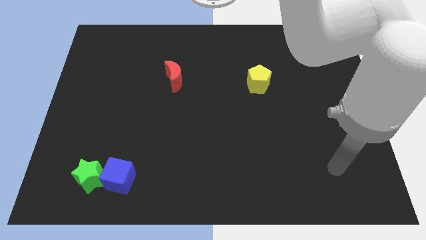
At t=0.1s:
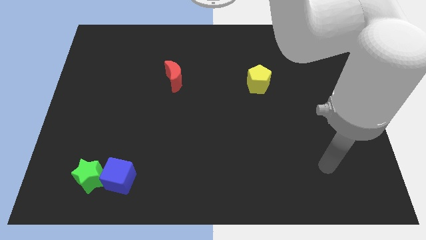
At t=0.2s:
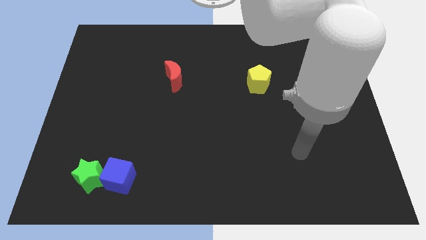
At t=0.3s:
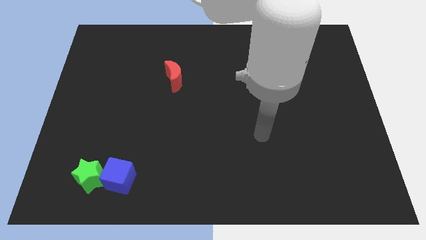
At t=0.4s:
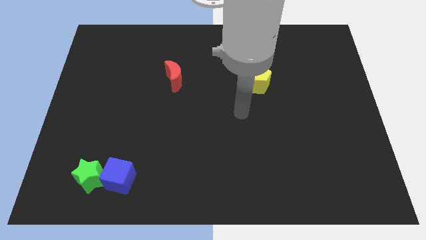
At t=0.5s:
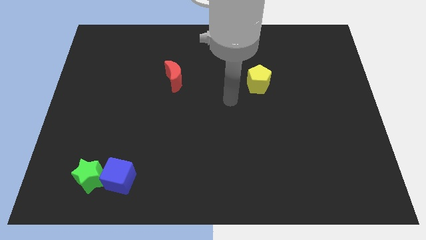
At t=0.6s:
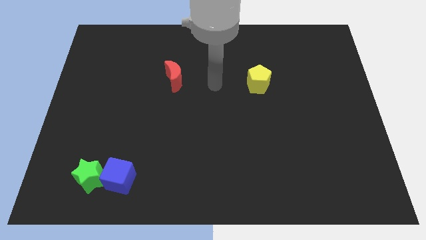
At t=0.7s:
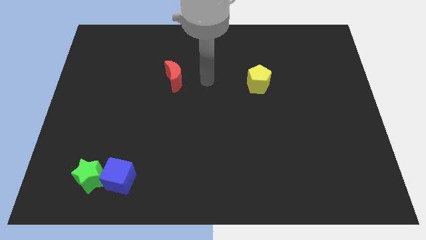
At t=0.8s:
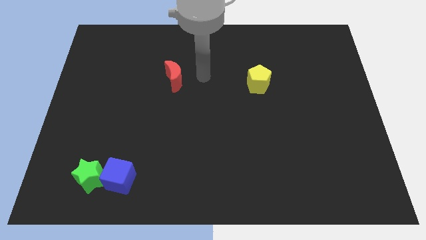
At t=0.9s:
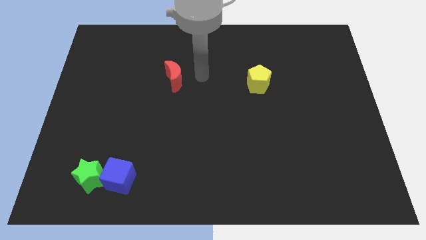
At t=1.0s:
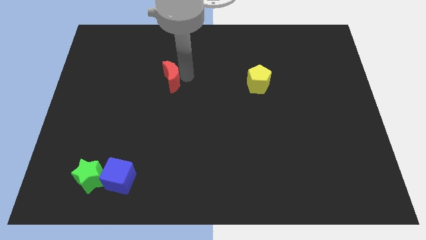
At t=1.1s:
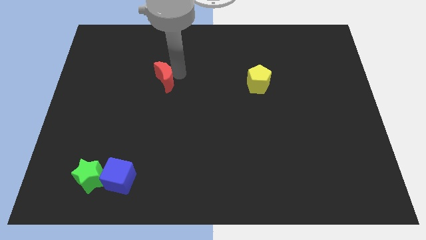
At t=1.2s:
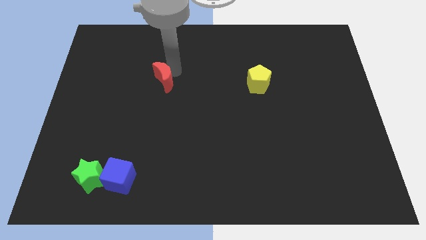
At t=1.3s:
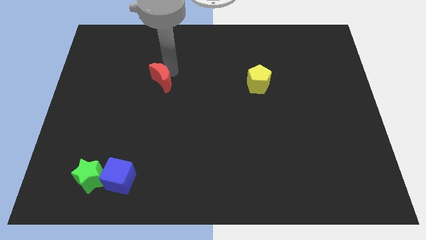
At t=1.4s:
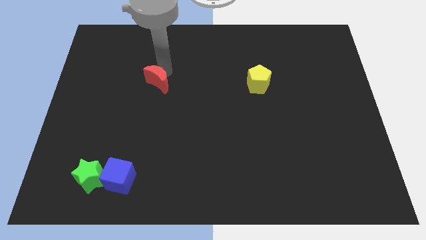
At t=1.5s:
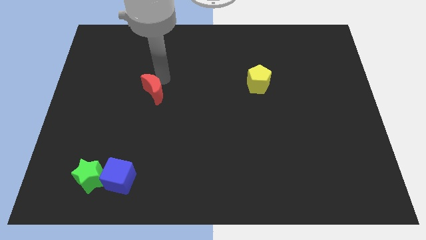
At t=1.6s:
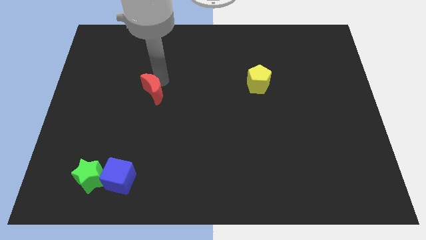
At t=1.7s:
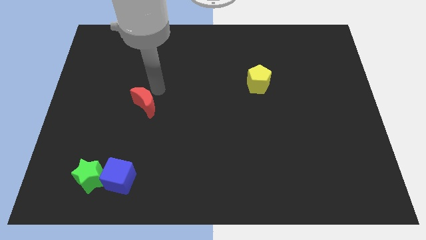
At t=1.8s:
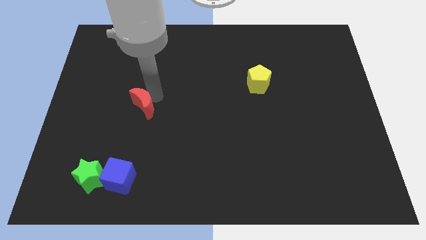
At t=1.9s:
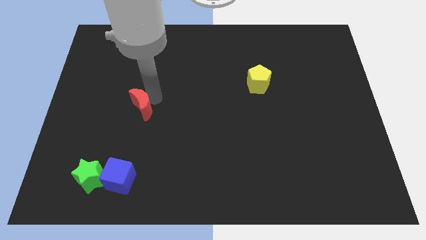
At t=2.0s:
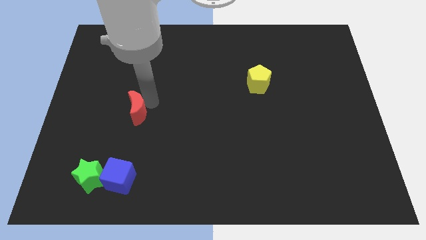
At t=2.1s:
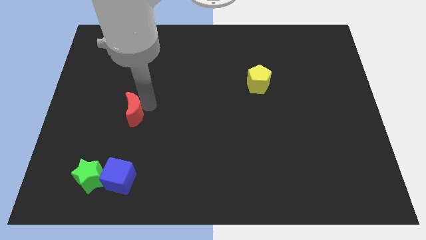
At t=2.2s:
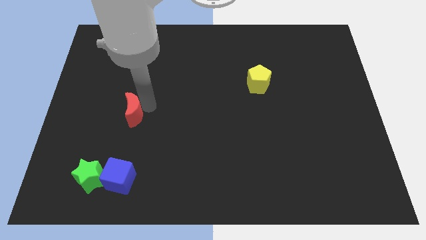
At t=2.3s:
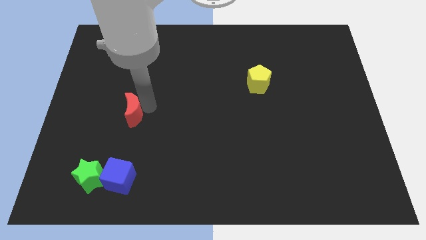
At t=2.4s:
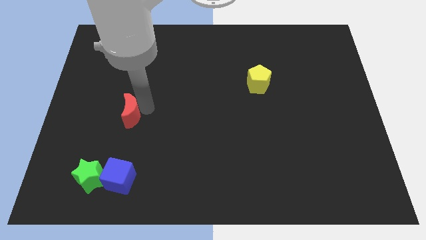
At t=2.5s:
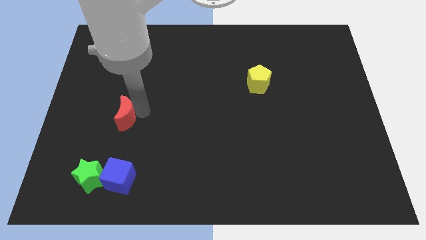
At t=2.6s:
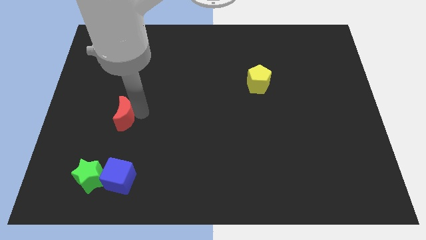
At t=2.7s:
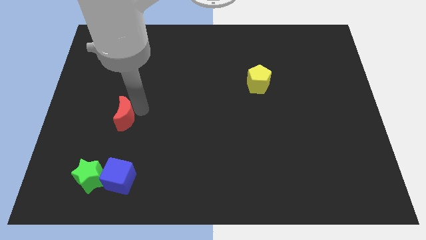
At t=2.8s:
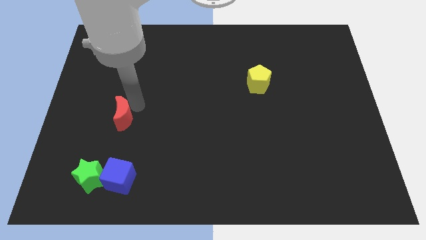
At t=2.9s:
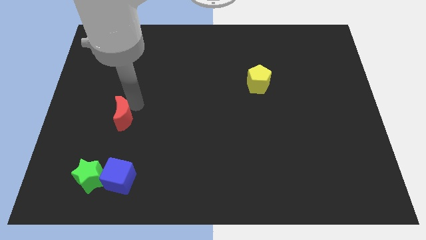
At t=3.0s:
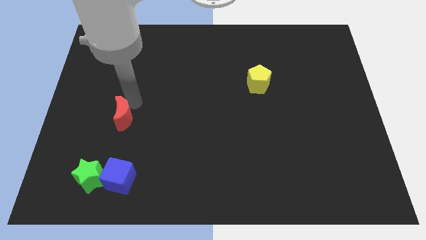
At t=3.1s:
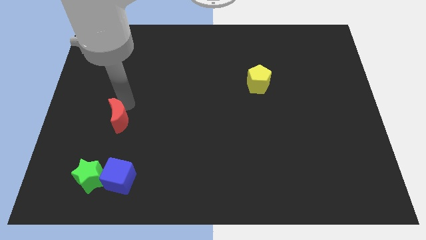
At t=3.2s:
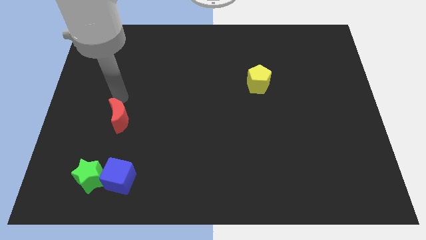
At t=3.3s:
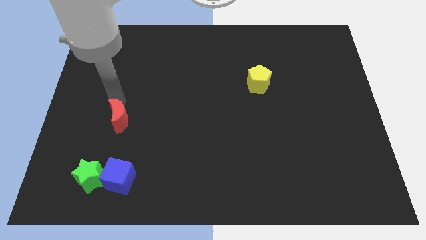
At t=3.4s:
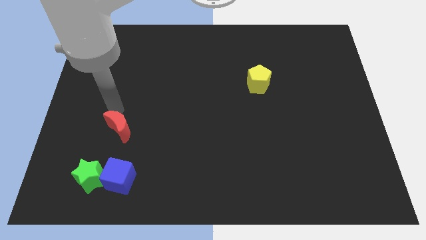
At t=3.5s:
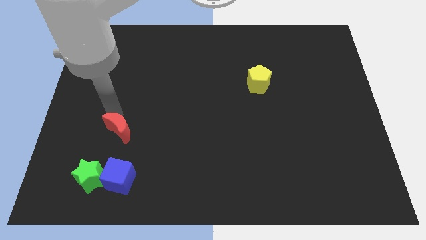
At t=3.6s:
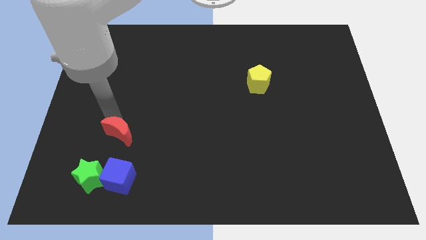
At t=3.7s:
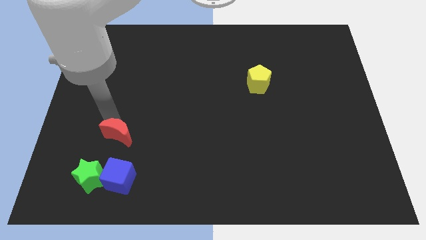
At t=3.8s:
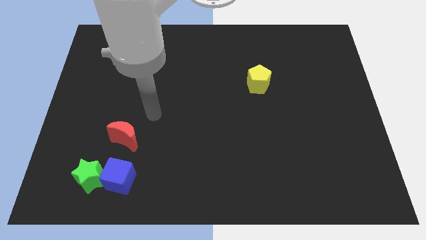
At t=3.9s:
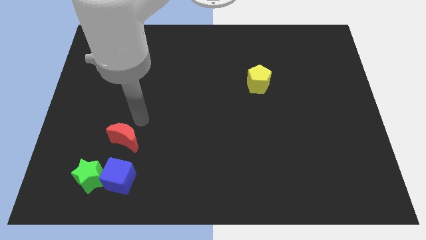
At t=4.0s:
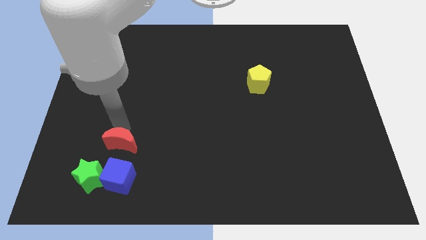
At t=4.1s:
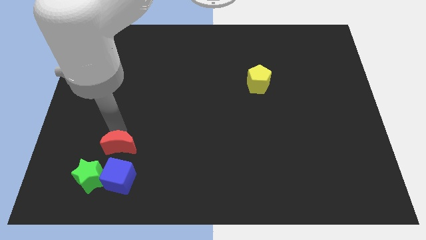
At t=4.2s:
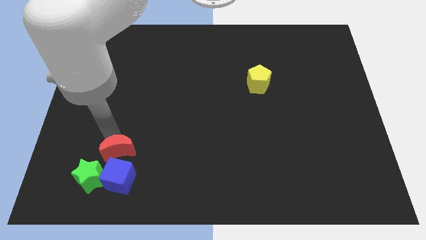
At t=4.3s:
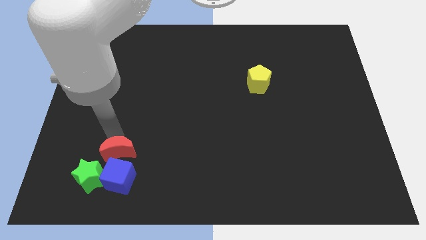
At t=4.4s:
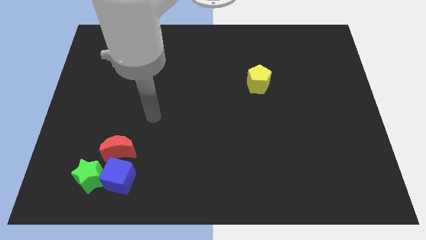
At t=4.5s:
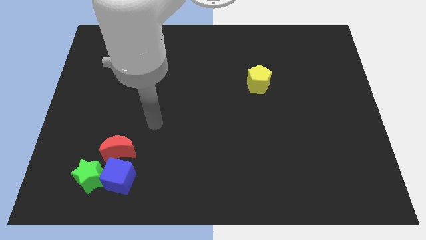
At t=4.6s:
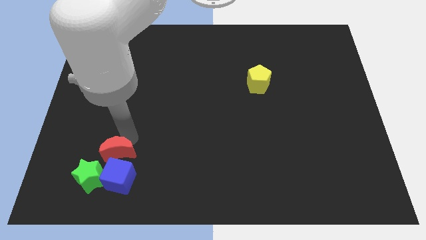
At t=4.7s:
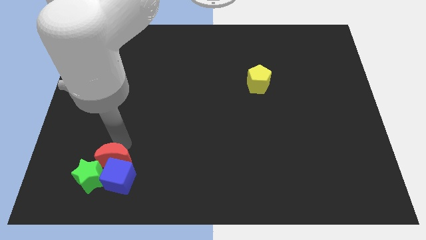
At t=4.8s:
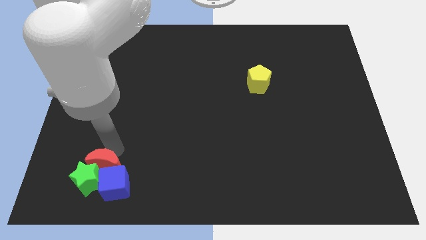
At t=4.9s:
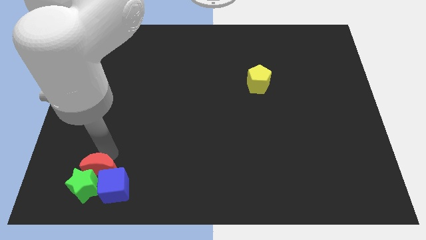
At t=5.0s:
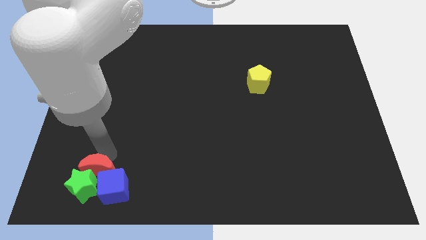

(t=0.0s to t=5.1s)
slide the moon close to the green block

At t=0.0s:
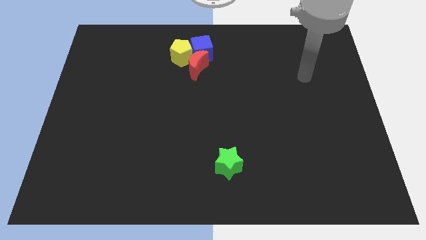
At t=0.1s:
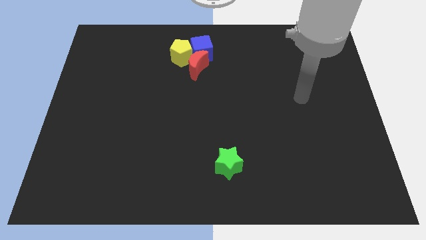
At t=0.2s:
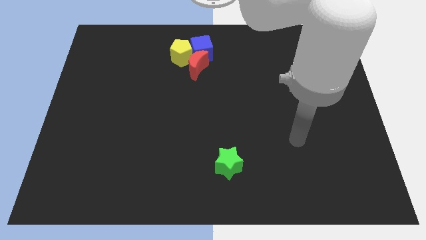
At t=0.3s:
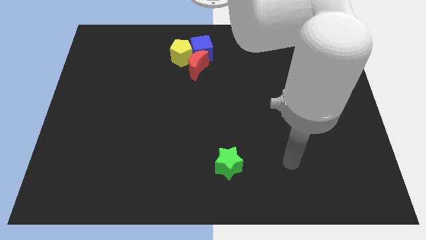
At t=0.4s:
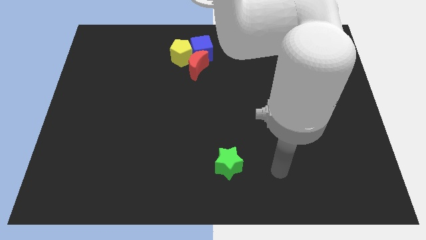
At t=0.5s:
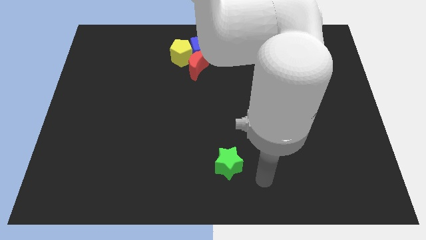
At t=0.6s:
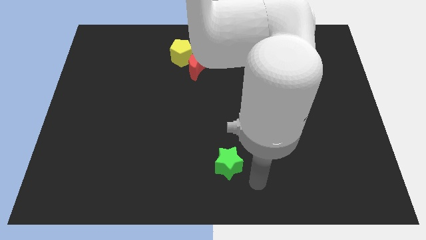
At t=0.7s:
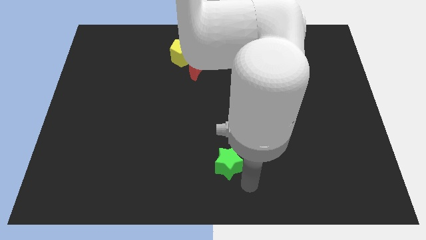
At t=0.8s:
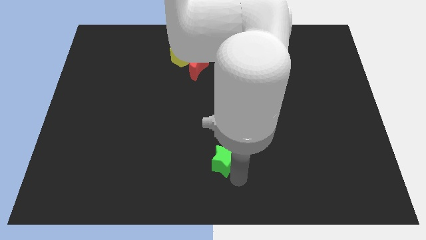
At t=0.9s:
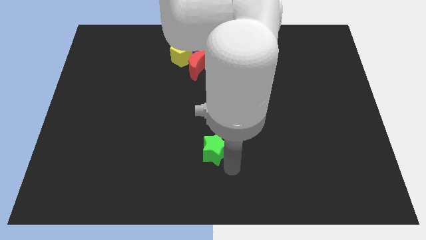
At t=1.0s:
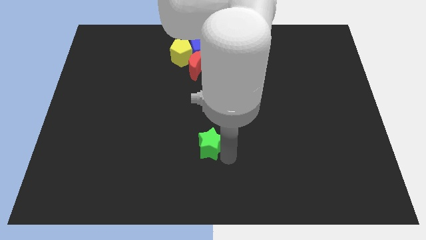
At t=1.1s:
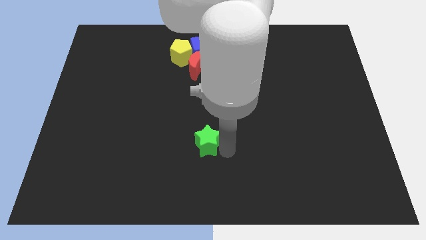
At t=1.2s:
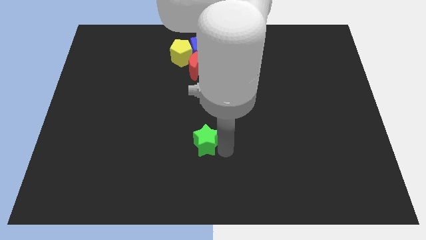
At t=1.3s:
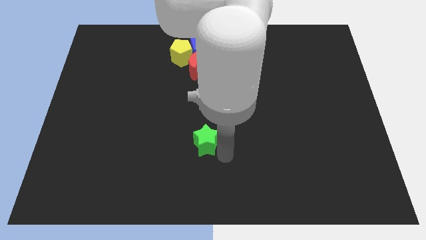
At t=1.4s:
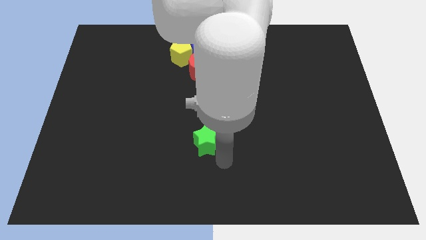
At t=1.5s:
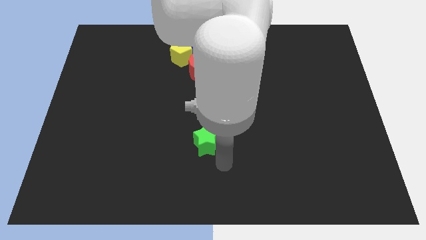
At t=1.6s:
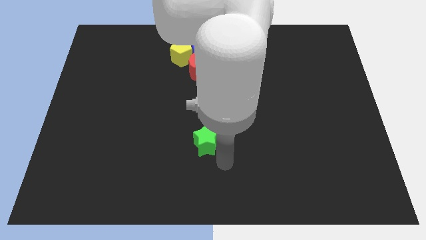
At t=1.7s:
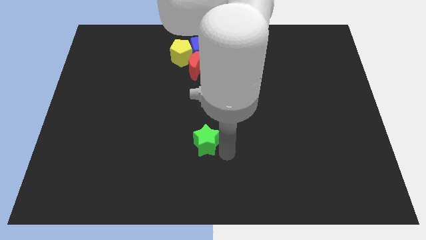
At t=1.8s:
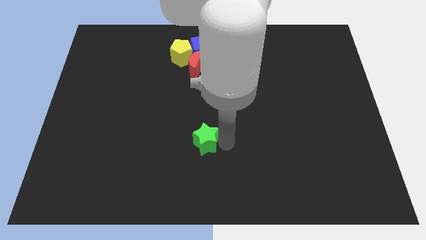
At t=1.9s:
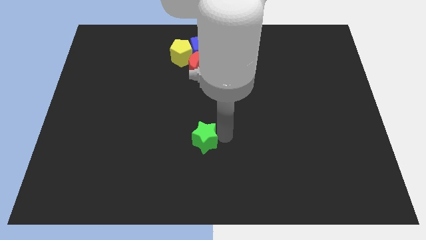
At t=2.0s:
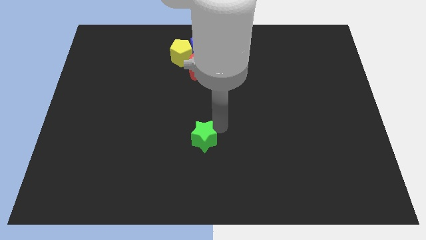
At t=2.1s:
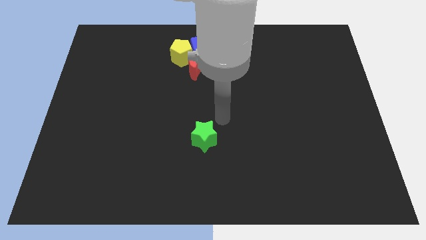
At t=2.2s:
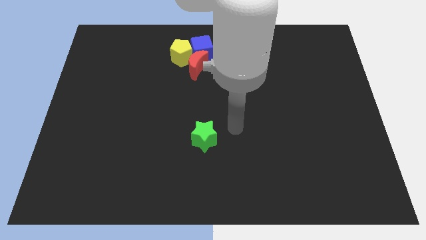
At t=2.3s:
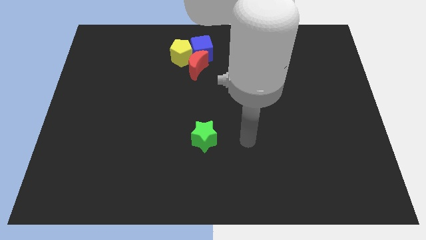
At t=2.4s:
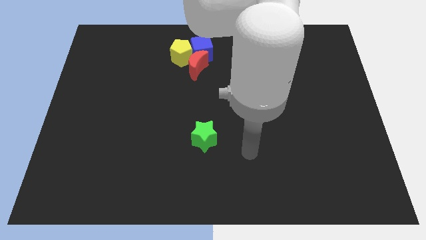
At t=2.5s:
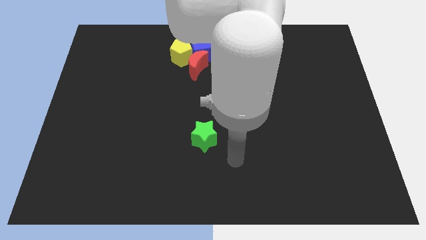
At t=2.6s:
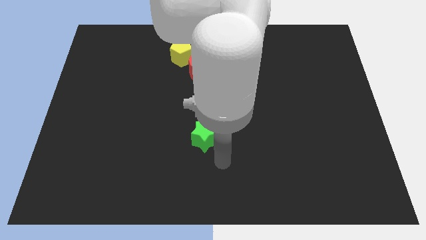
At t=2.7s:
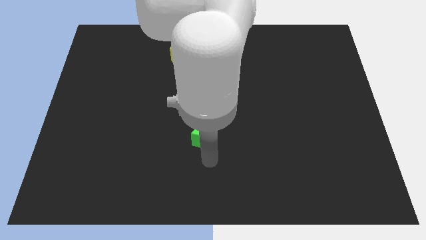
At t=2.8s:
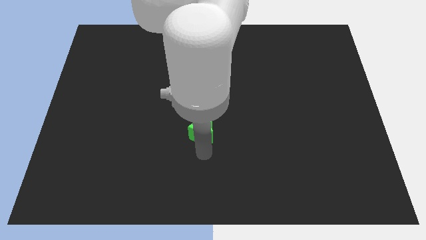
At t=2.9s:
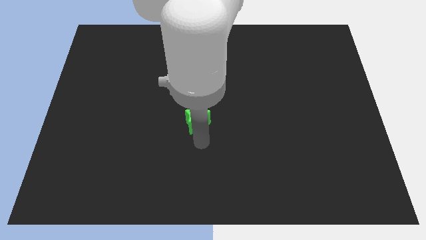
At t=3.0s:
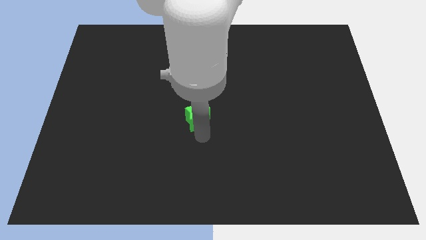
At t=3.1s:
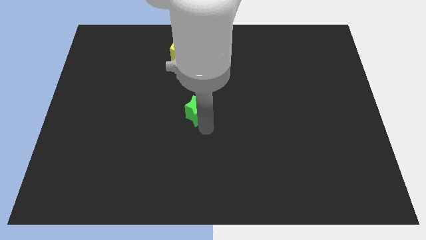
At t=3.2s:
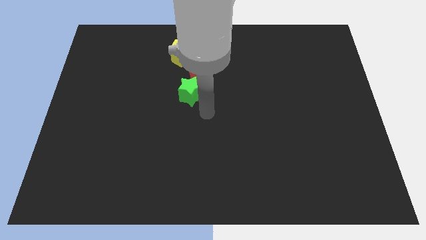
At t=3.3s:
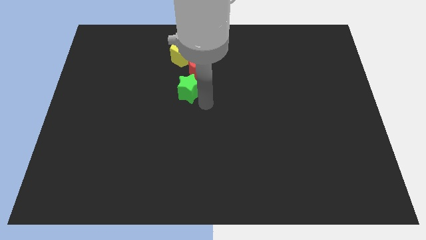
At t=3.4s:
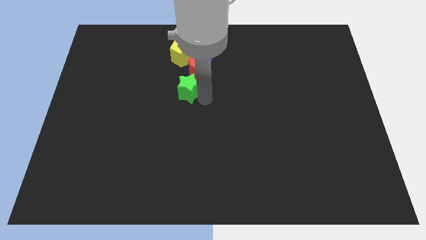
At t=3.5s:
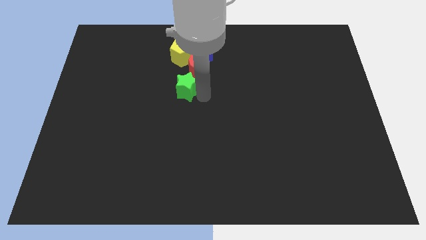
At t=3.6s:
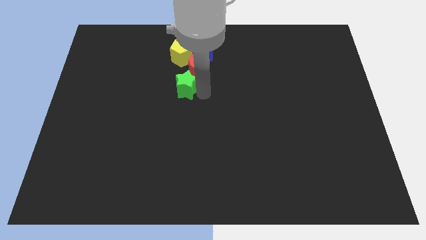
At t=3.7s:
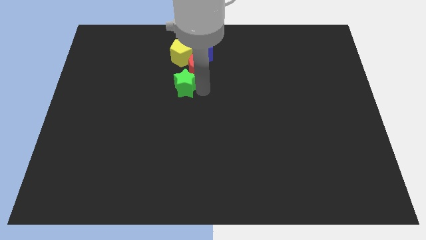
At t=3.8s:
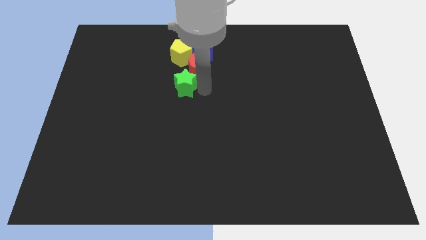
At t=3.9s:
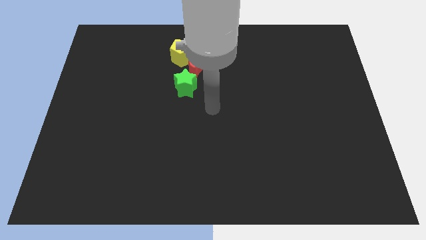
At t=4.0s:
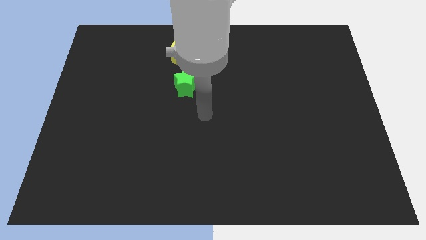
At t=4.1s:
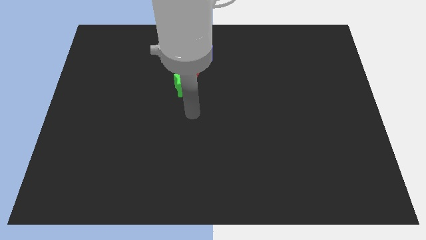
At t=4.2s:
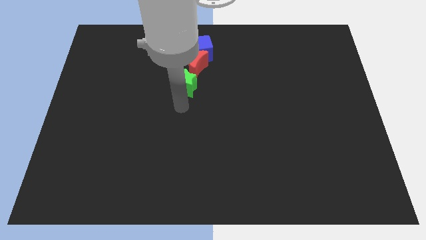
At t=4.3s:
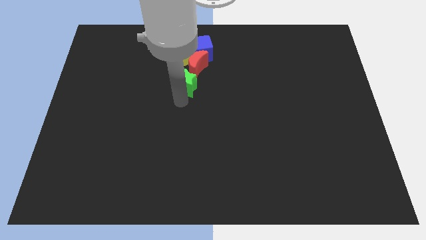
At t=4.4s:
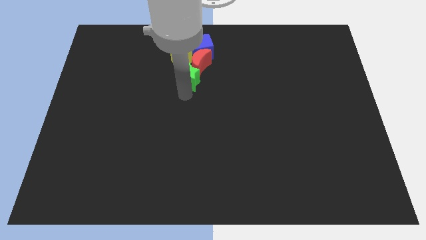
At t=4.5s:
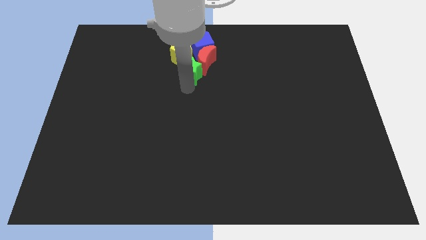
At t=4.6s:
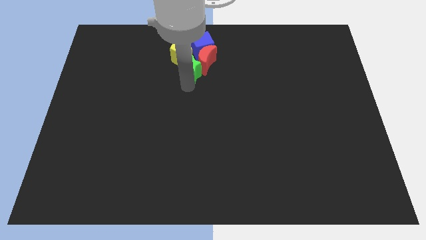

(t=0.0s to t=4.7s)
push the star towards the moon
